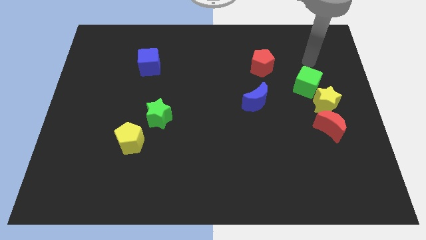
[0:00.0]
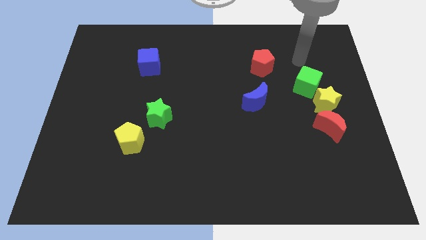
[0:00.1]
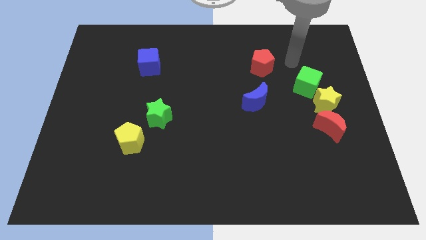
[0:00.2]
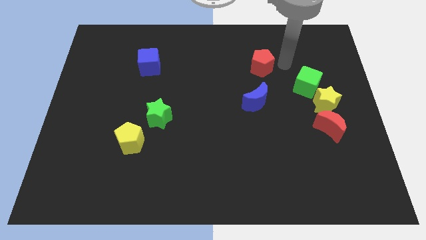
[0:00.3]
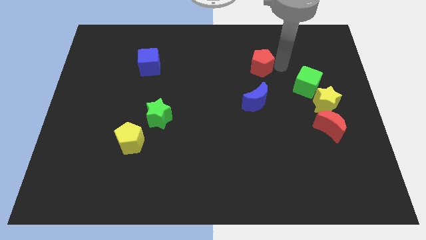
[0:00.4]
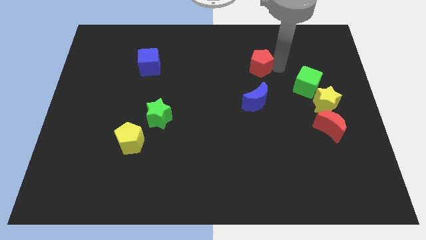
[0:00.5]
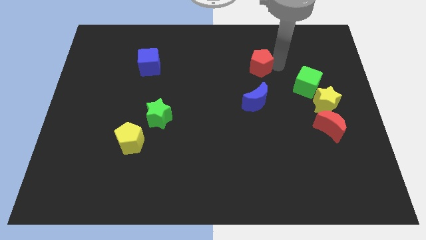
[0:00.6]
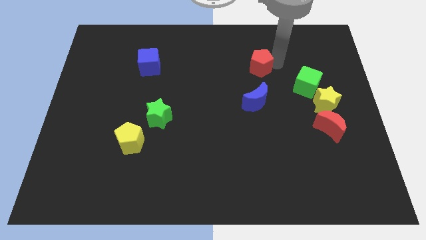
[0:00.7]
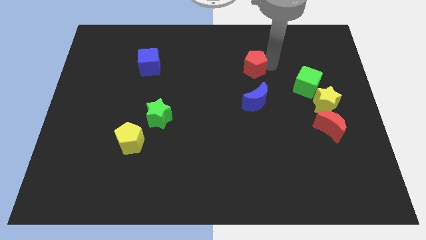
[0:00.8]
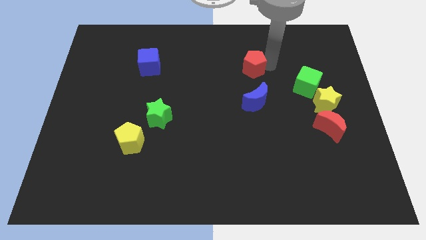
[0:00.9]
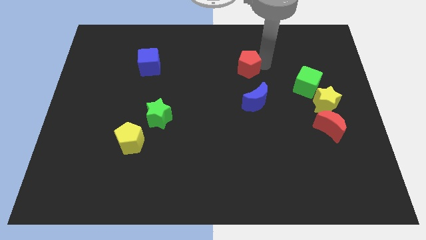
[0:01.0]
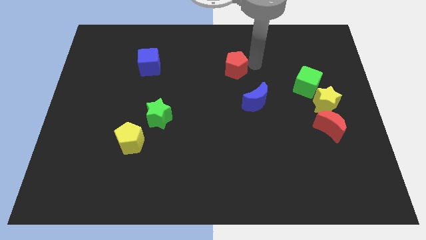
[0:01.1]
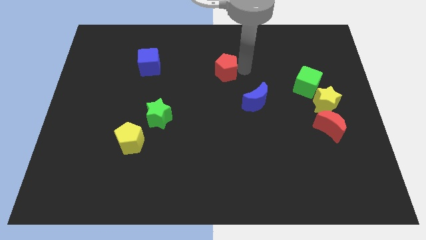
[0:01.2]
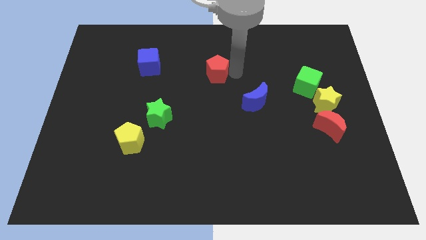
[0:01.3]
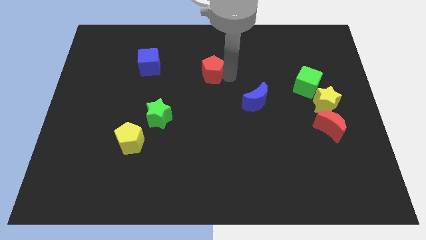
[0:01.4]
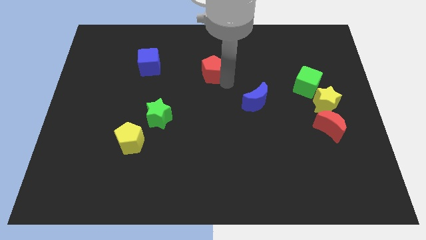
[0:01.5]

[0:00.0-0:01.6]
move the red pentagon to the left of the board

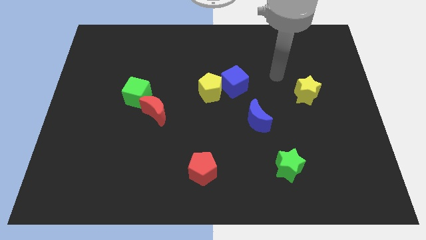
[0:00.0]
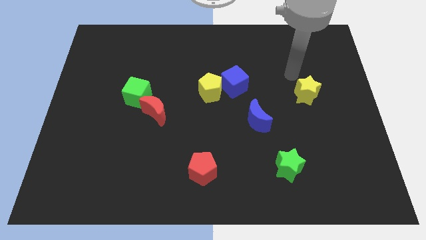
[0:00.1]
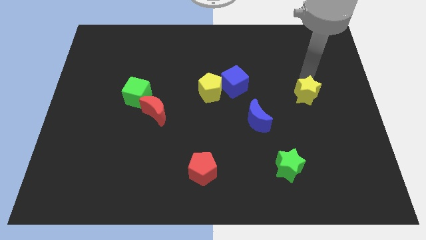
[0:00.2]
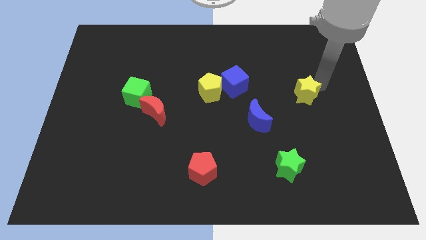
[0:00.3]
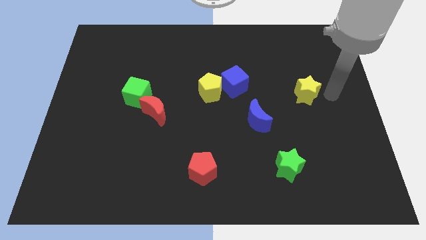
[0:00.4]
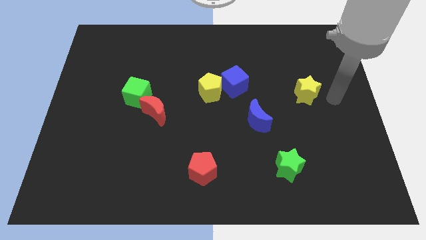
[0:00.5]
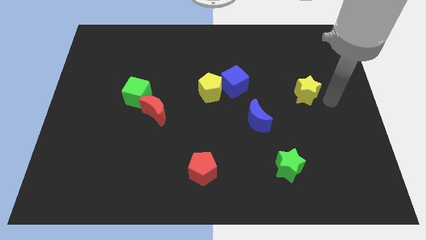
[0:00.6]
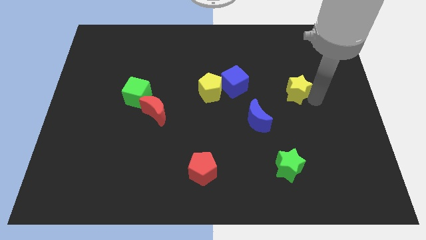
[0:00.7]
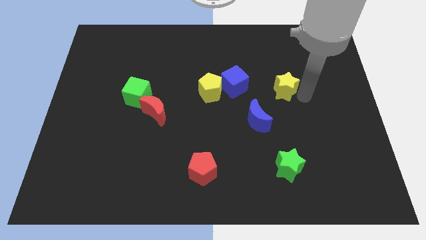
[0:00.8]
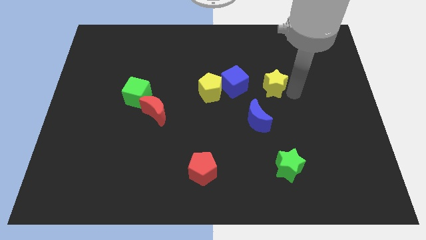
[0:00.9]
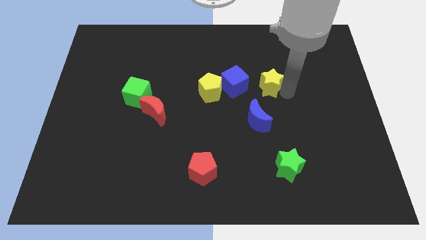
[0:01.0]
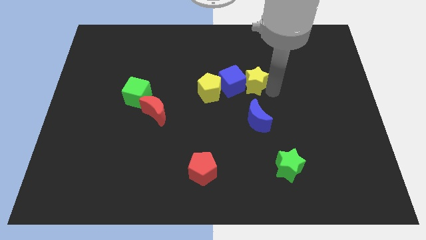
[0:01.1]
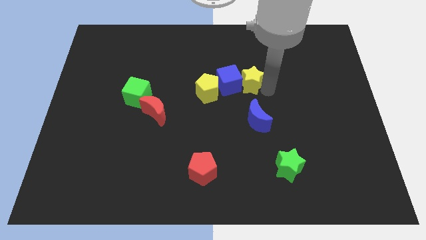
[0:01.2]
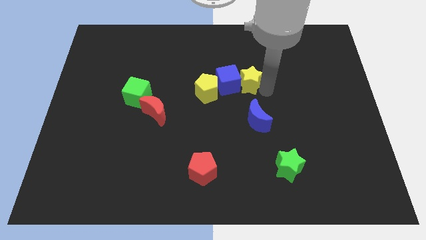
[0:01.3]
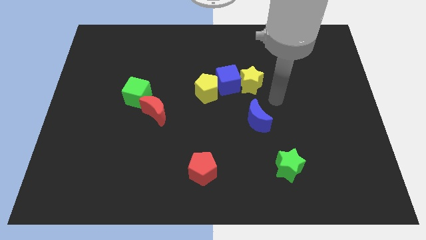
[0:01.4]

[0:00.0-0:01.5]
move the yellow star to the right of the blue cube

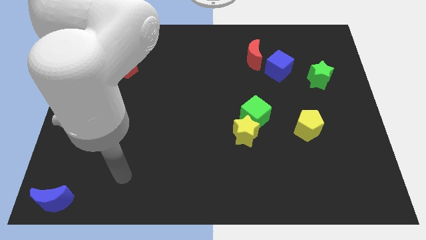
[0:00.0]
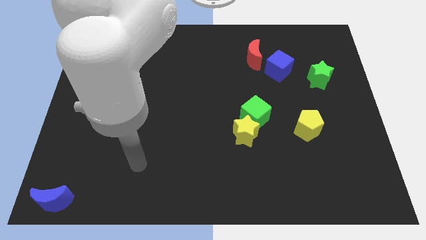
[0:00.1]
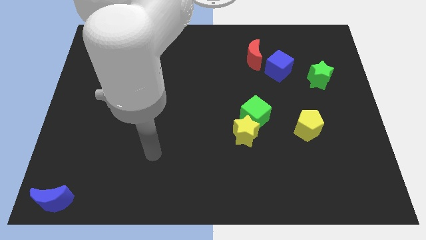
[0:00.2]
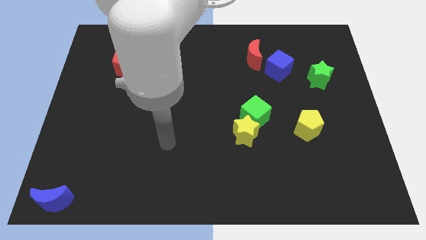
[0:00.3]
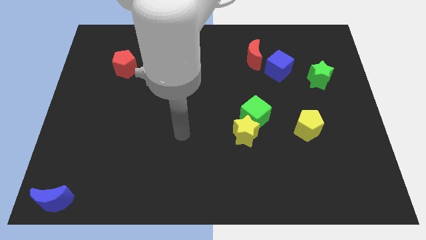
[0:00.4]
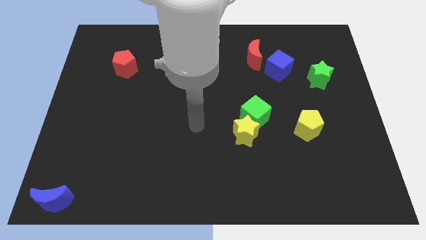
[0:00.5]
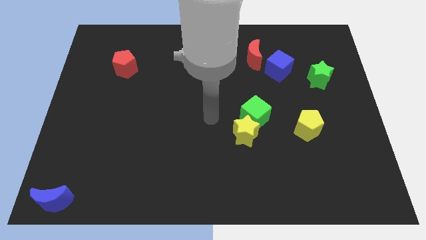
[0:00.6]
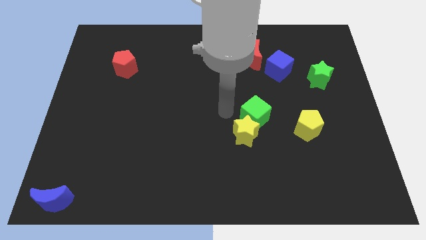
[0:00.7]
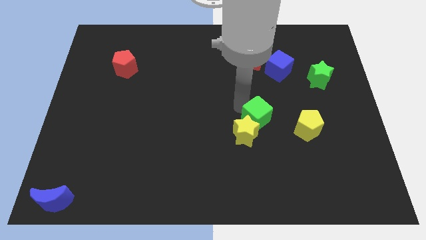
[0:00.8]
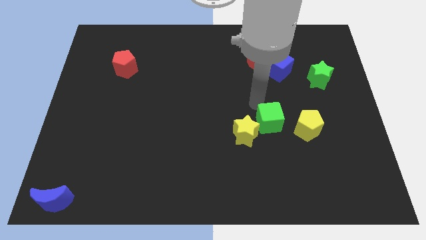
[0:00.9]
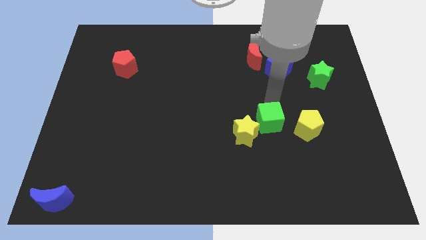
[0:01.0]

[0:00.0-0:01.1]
place the arm above the green cube

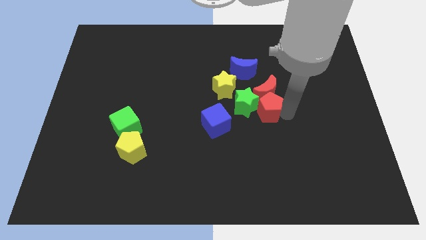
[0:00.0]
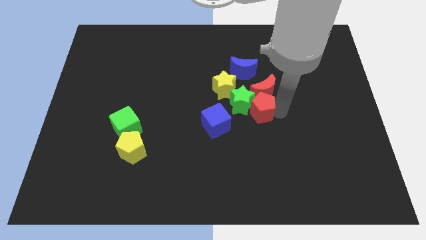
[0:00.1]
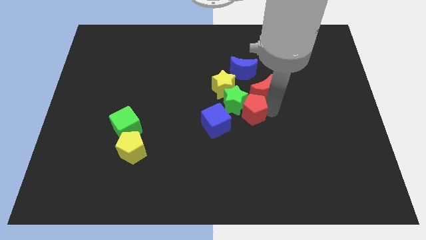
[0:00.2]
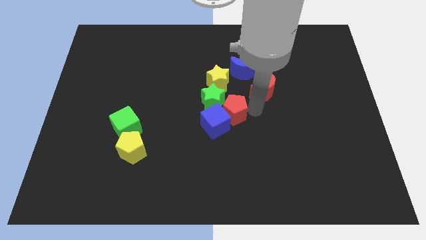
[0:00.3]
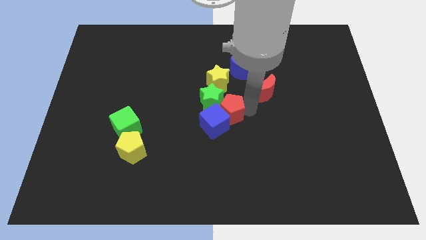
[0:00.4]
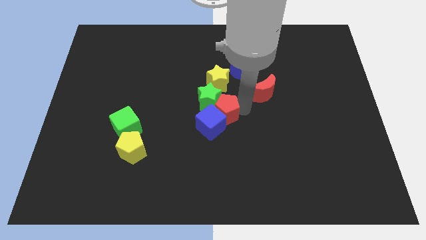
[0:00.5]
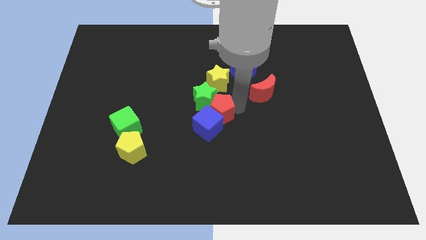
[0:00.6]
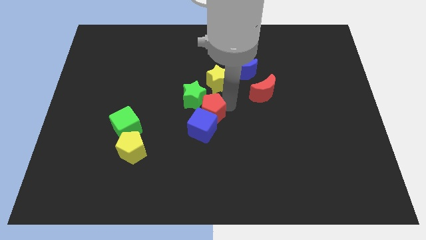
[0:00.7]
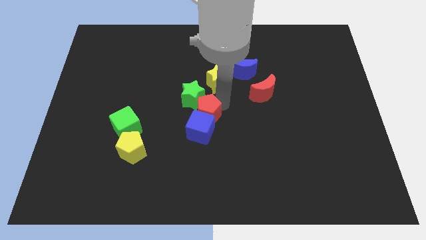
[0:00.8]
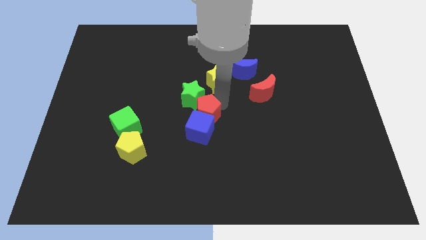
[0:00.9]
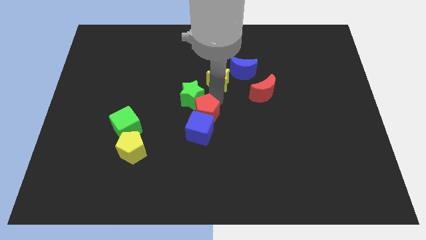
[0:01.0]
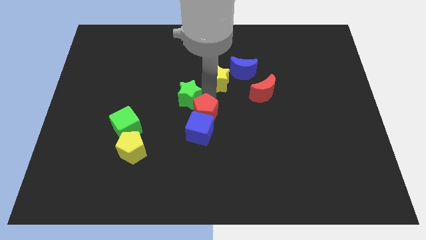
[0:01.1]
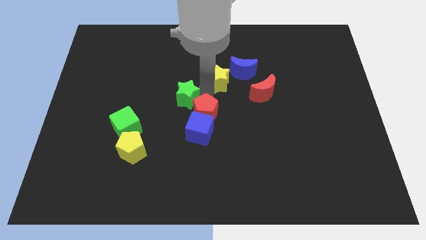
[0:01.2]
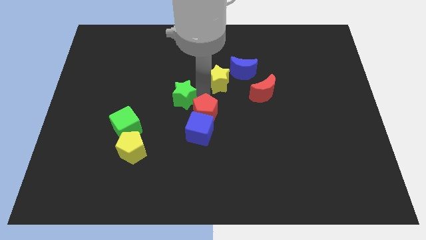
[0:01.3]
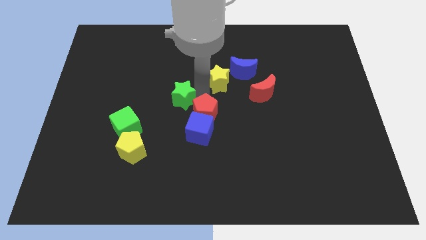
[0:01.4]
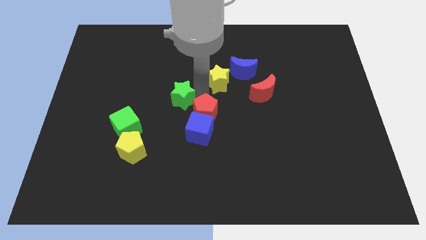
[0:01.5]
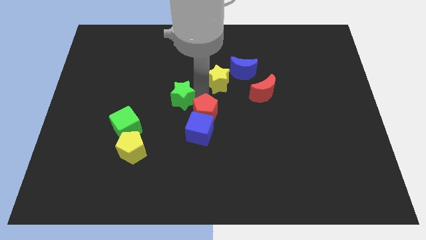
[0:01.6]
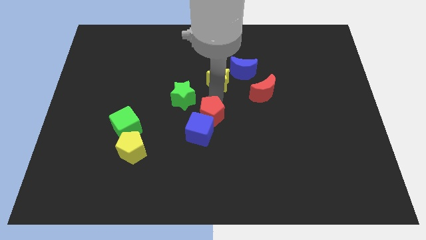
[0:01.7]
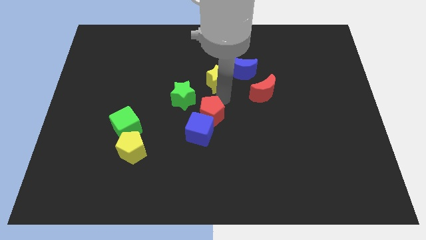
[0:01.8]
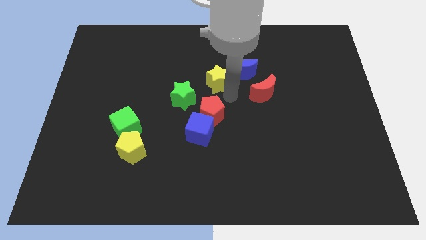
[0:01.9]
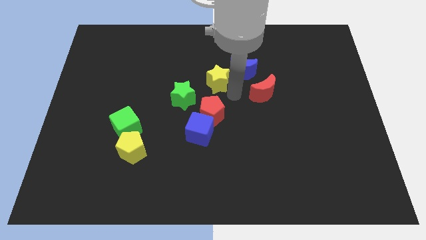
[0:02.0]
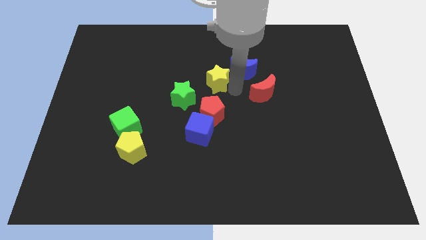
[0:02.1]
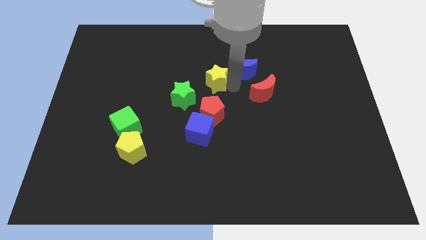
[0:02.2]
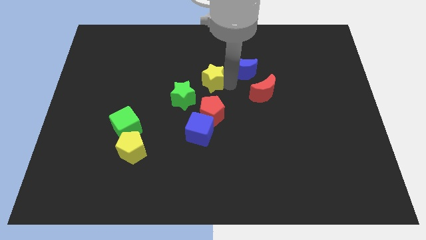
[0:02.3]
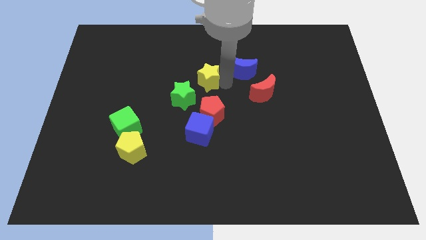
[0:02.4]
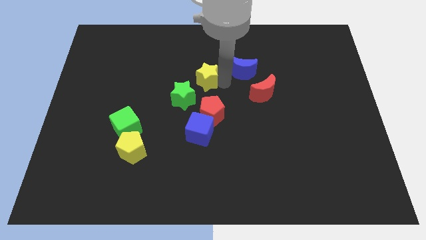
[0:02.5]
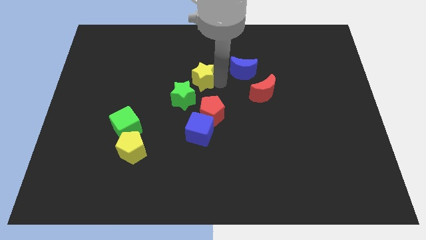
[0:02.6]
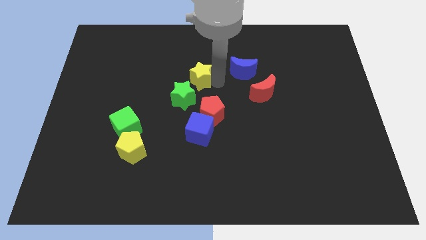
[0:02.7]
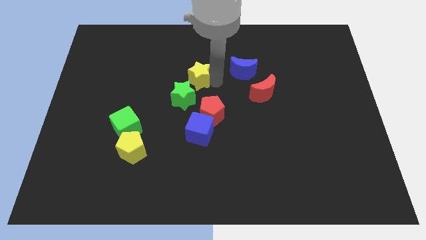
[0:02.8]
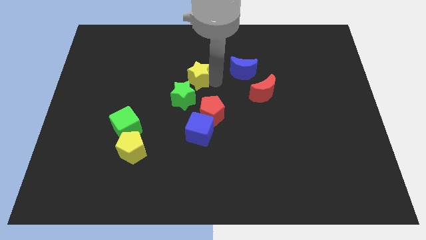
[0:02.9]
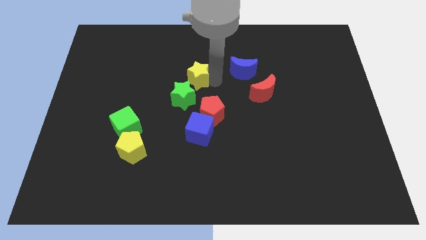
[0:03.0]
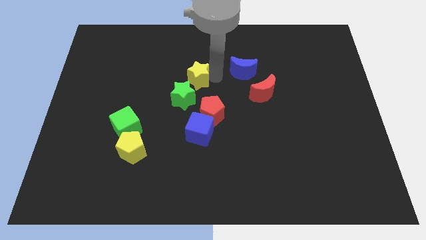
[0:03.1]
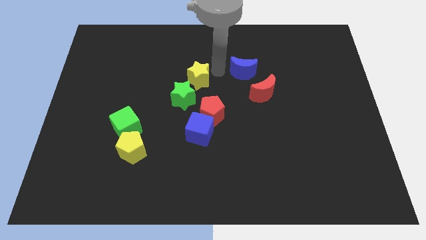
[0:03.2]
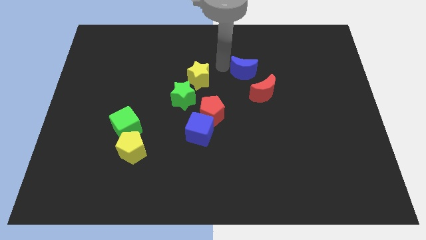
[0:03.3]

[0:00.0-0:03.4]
move the yellow star to the top of the green star

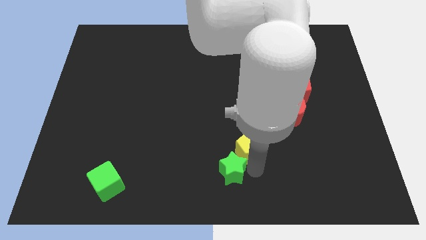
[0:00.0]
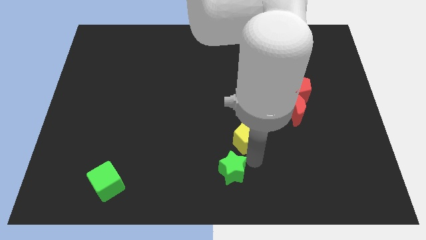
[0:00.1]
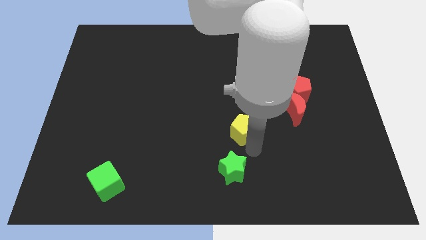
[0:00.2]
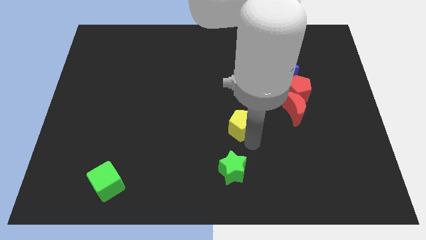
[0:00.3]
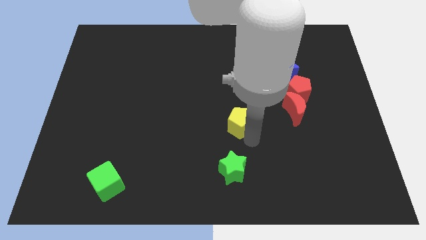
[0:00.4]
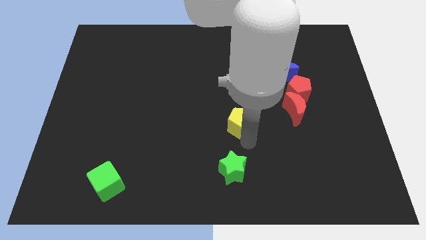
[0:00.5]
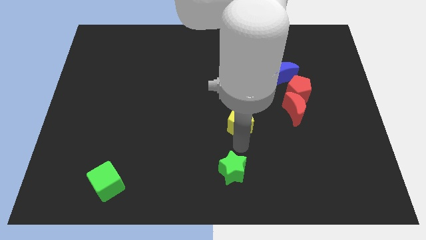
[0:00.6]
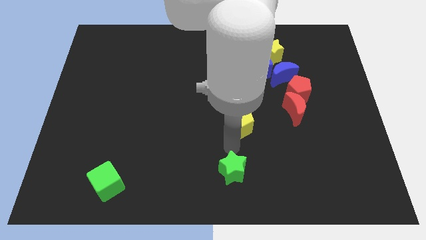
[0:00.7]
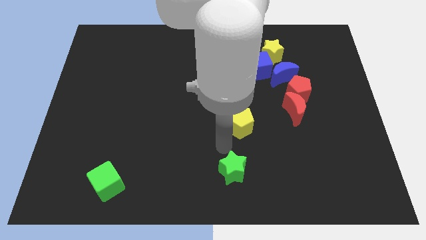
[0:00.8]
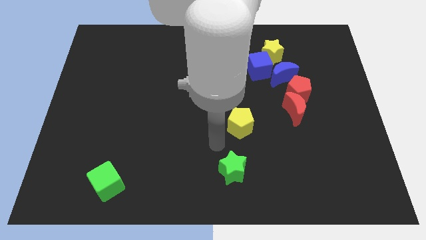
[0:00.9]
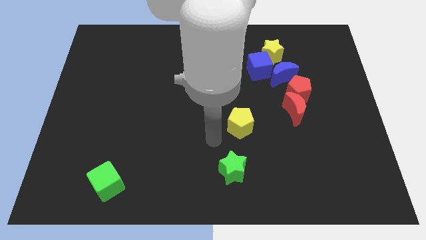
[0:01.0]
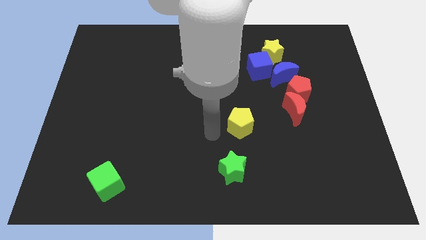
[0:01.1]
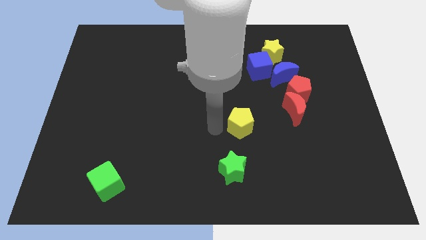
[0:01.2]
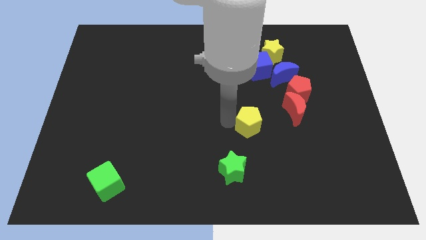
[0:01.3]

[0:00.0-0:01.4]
separate yellow pentagon from green star
